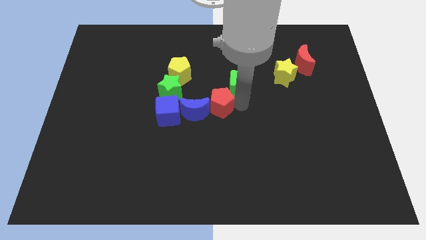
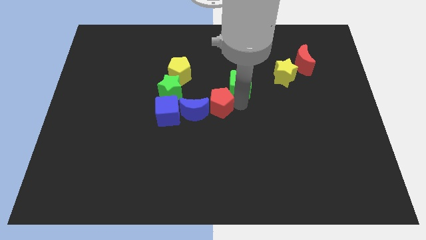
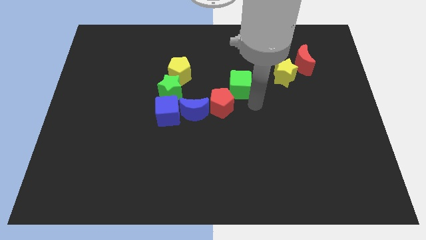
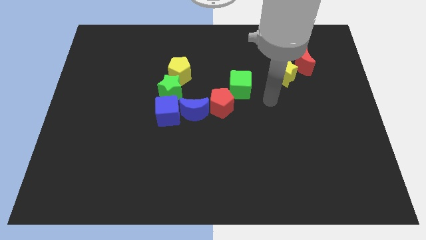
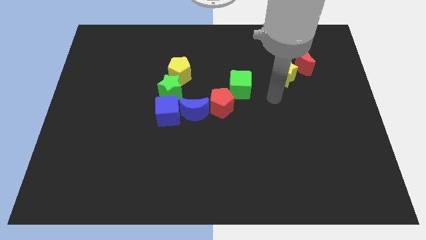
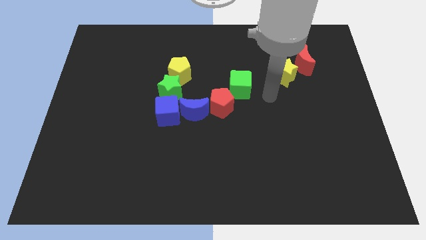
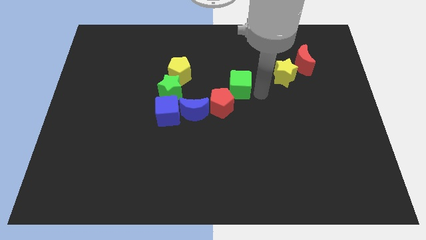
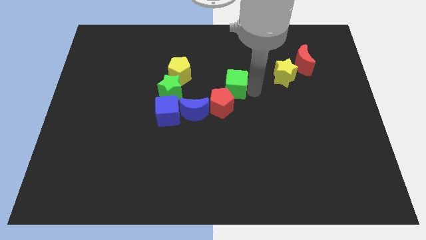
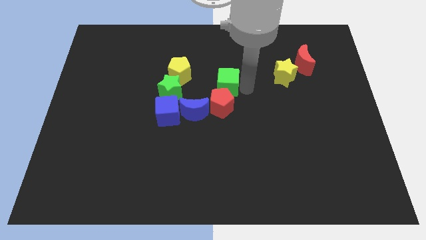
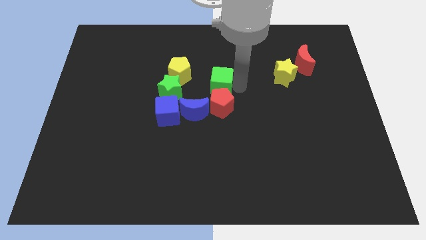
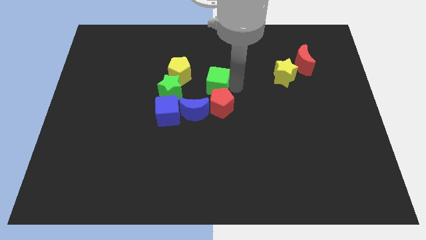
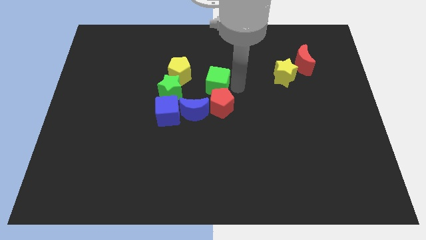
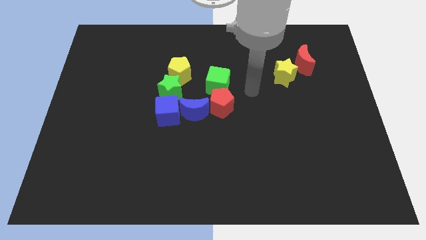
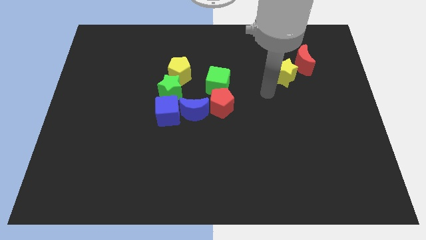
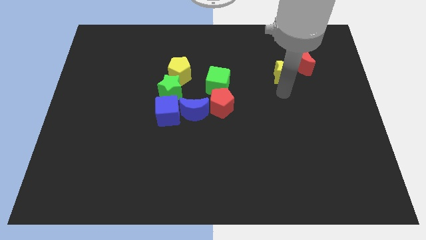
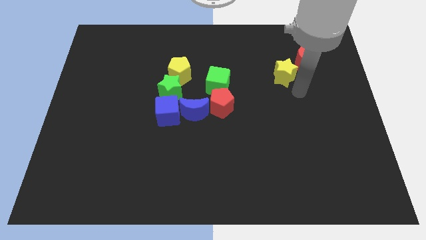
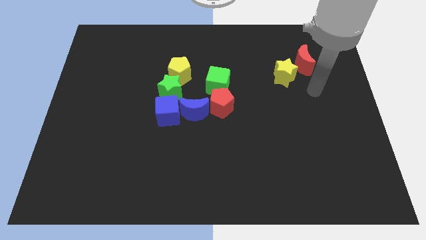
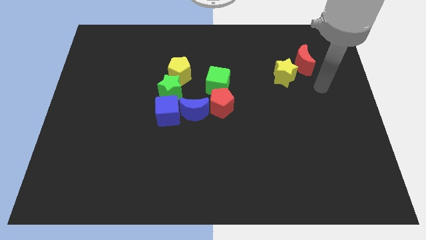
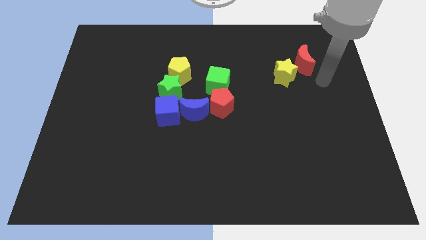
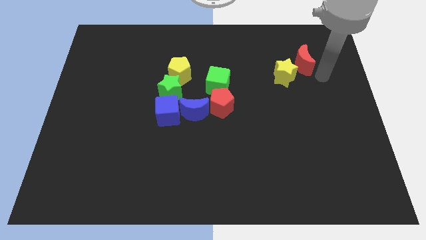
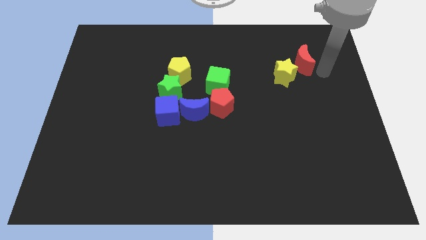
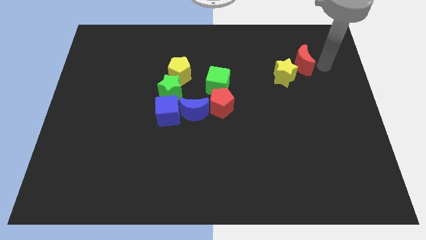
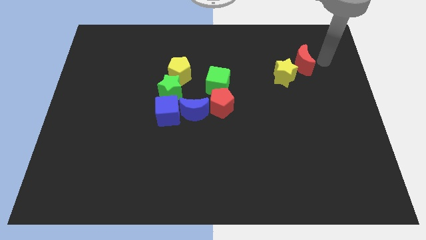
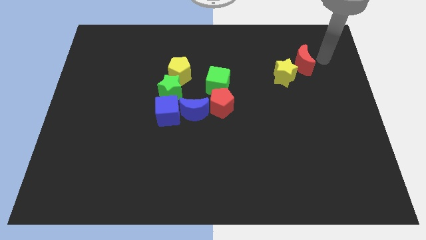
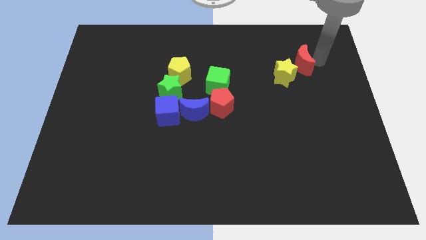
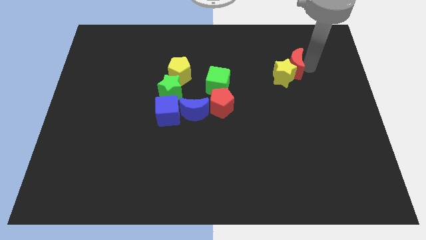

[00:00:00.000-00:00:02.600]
slide the green cube above the red pentagon

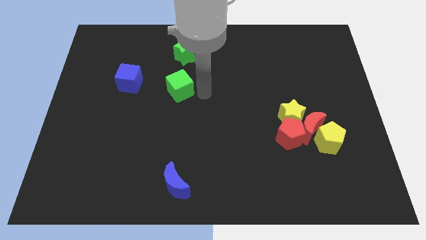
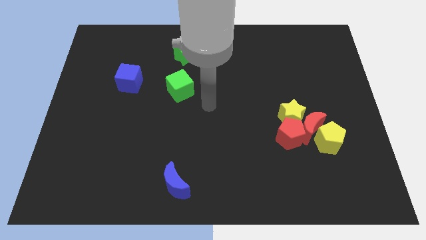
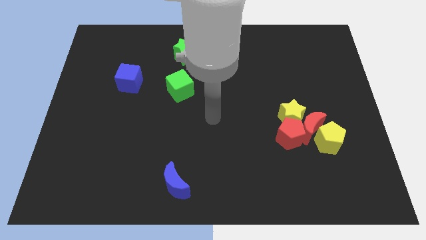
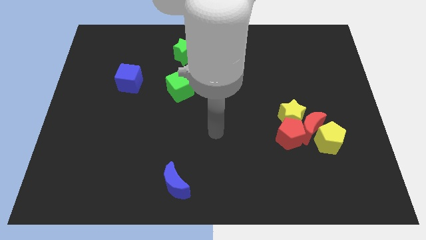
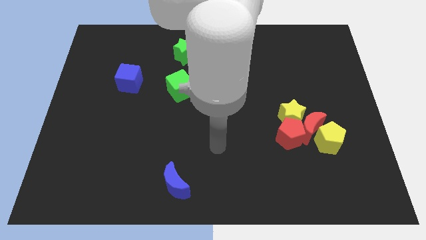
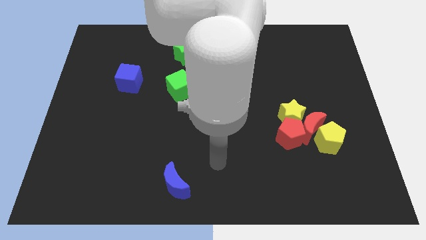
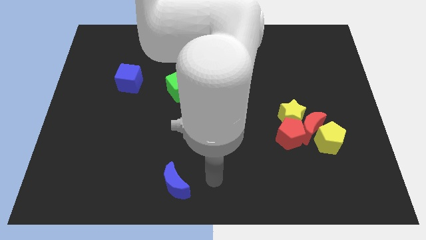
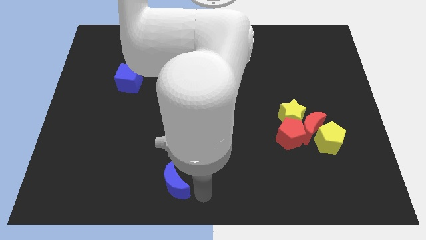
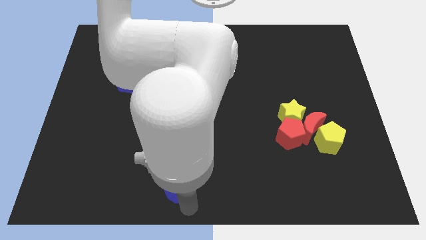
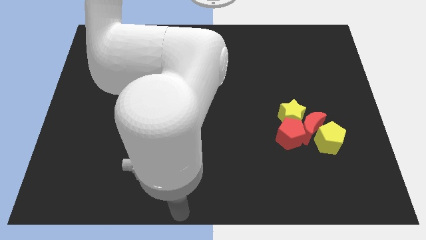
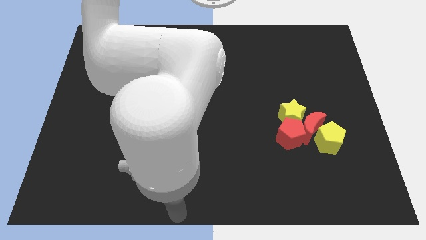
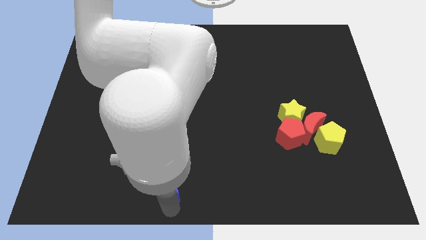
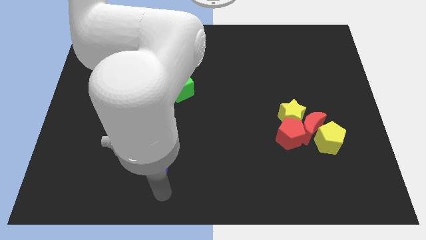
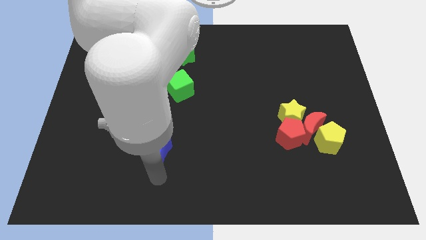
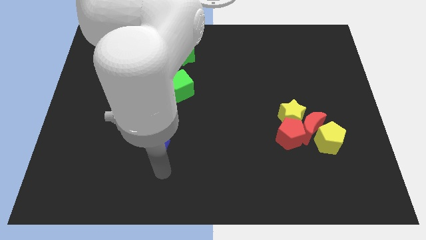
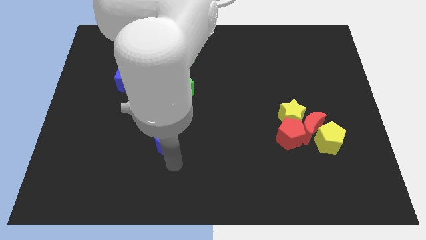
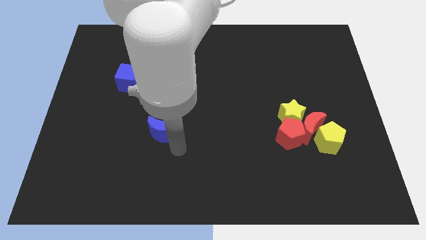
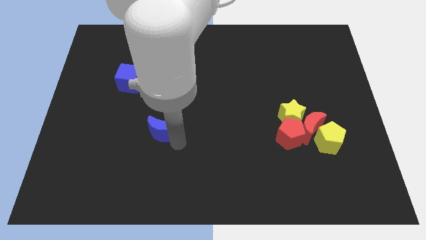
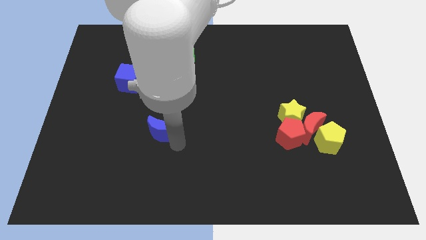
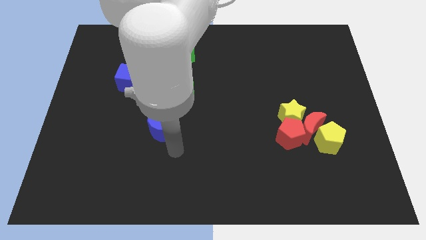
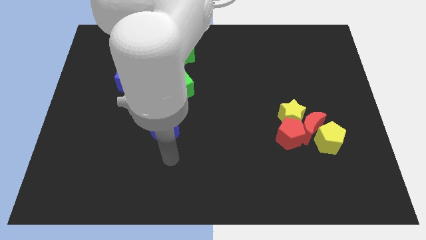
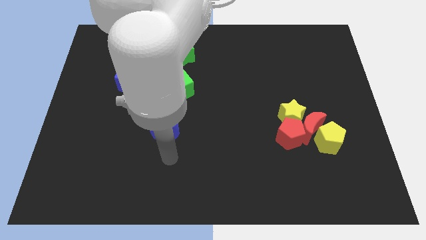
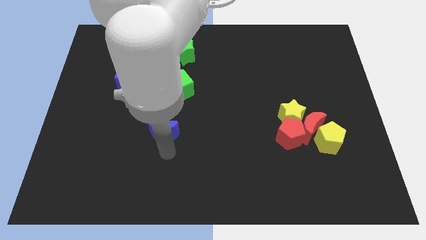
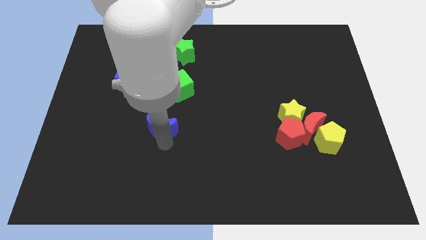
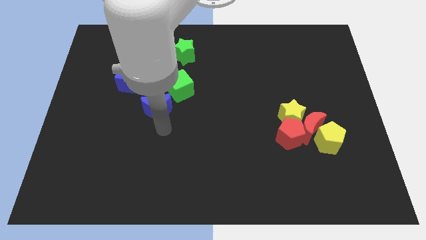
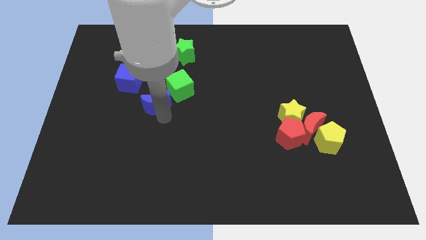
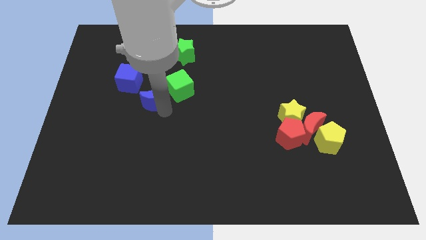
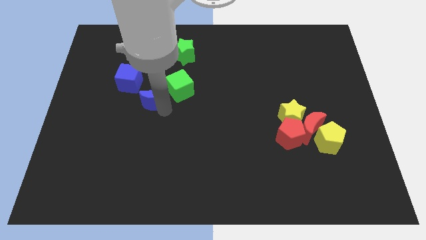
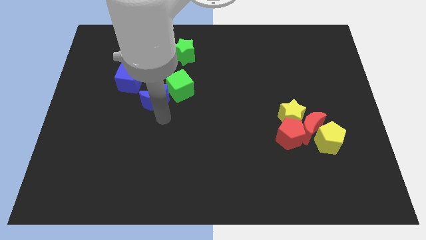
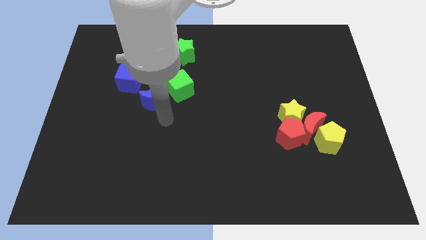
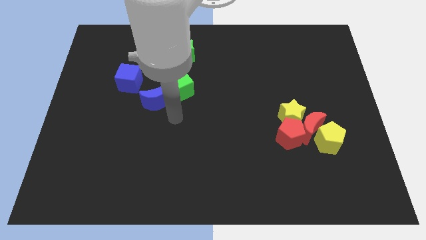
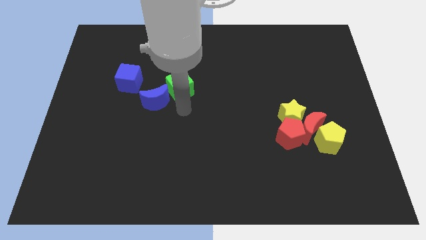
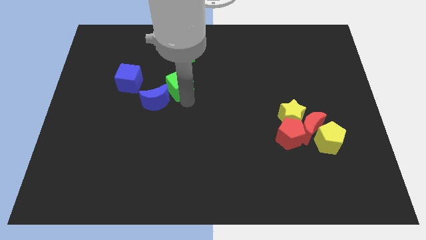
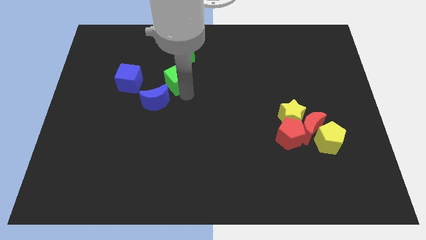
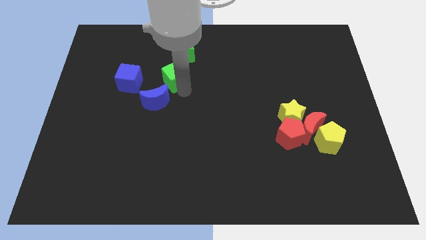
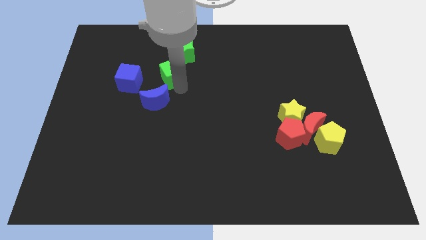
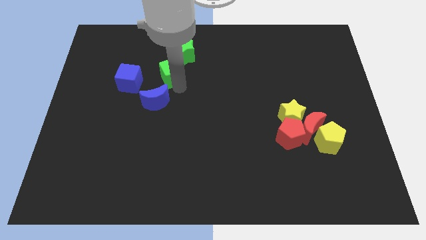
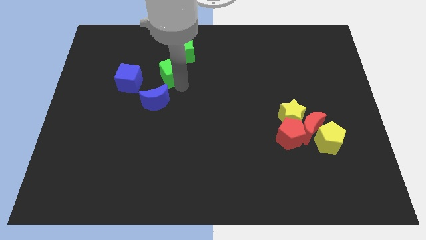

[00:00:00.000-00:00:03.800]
push the blue moon and green cube towards the top side to form a line

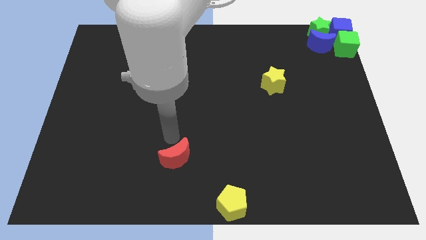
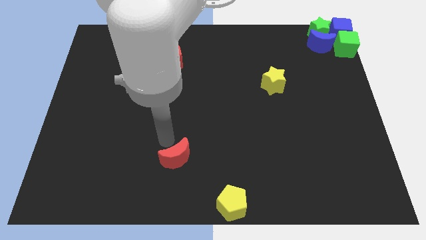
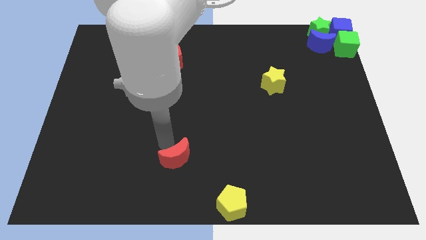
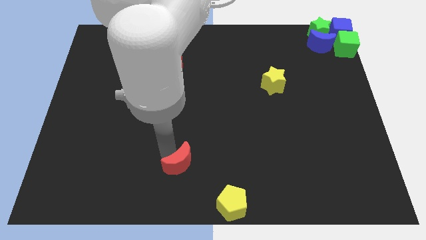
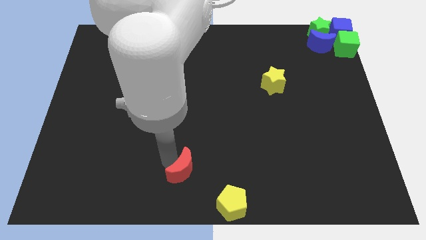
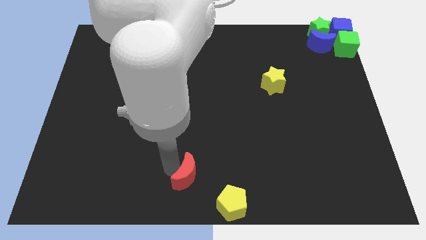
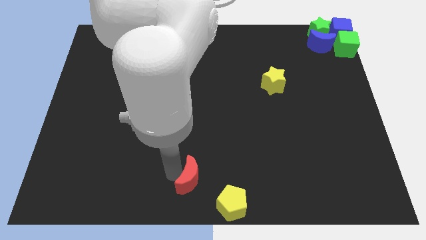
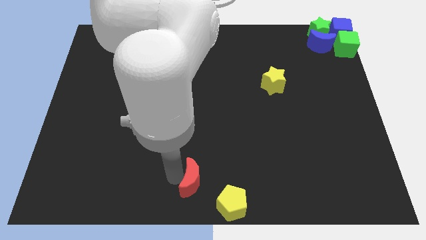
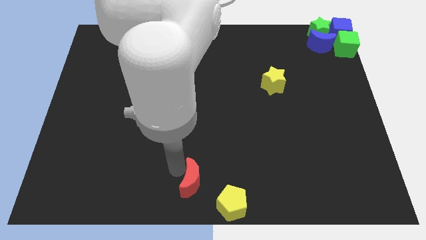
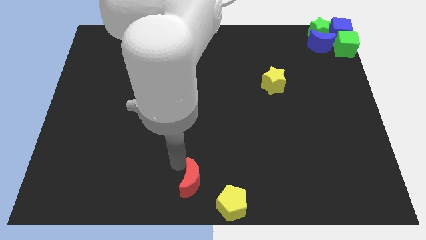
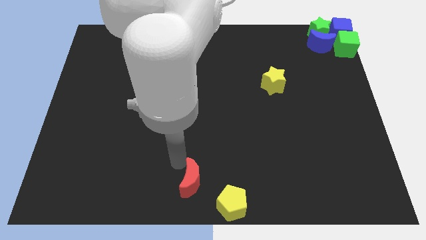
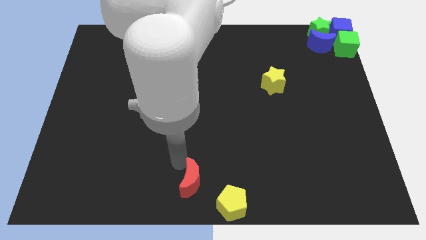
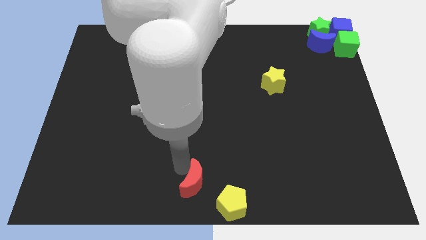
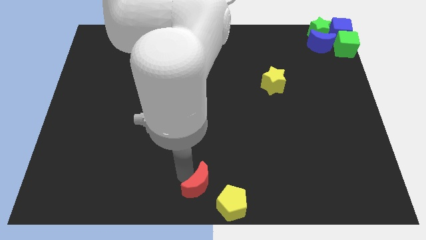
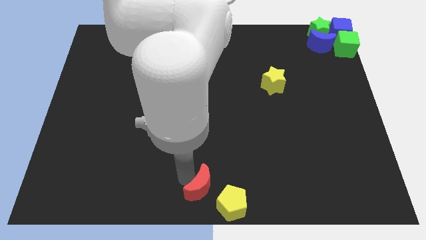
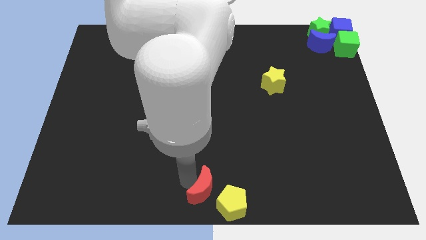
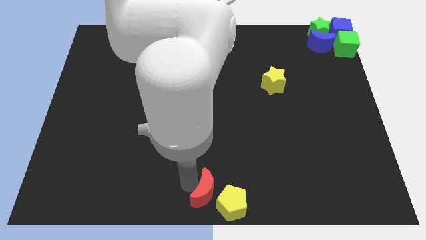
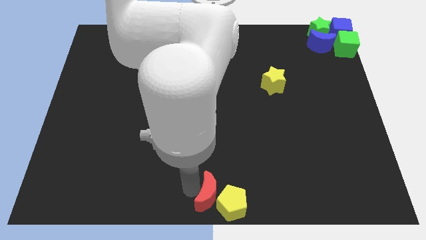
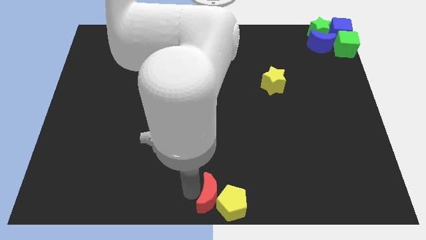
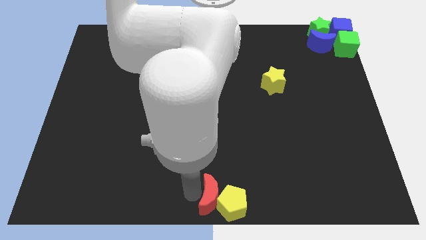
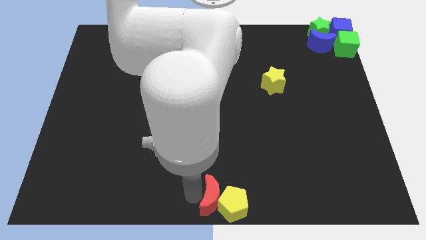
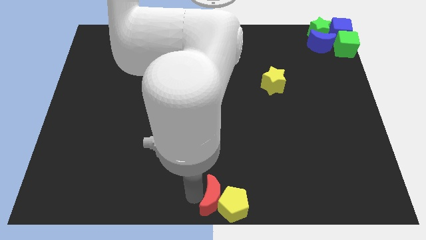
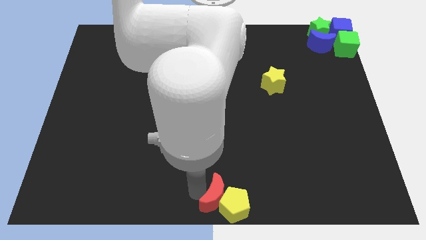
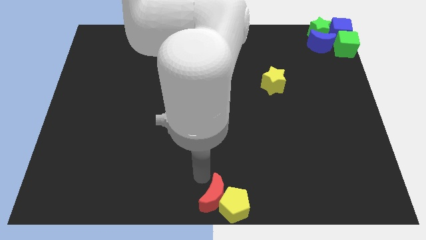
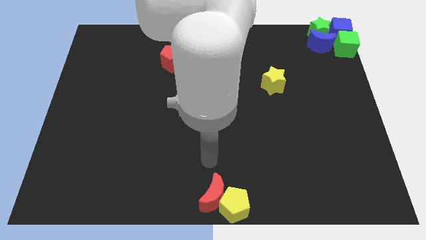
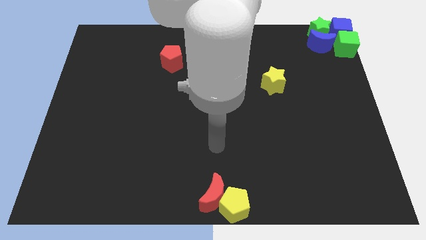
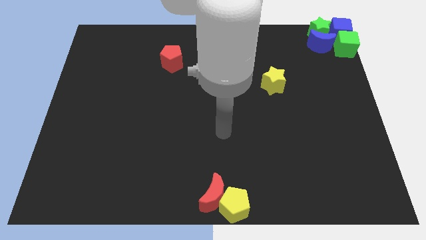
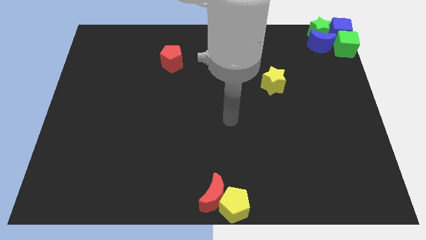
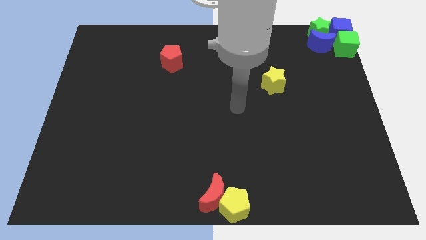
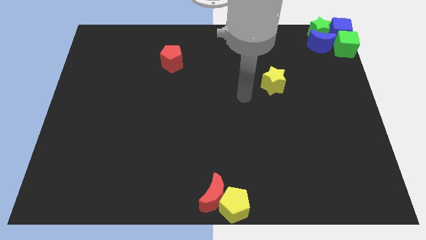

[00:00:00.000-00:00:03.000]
push the red crescent into the yellow pentagon
